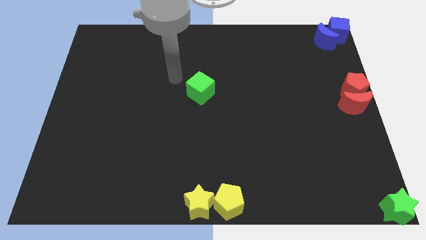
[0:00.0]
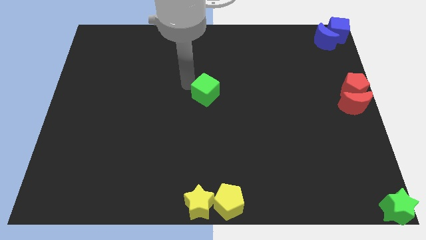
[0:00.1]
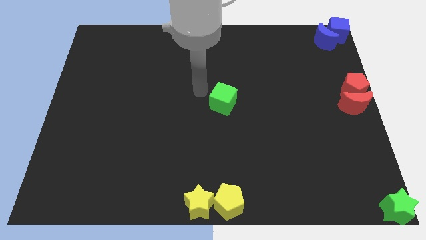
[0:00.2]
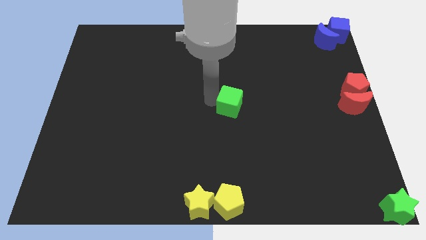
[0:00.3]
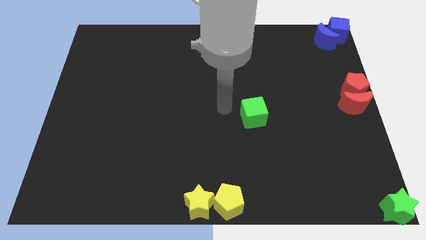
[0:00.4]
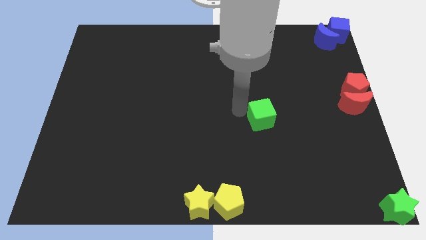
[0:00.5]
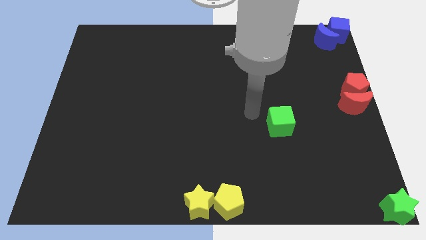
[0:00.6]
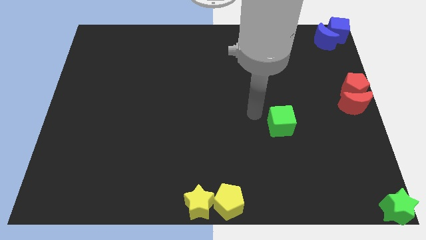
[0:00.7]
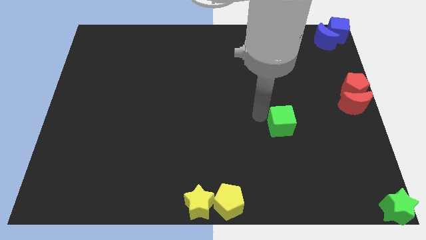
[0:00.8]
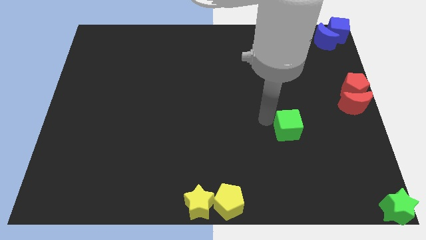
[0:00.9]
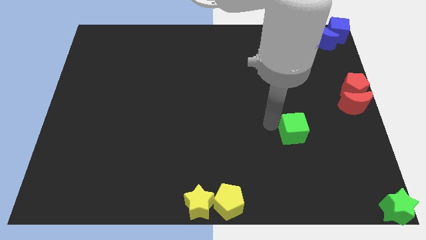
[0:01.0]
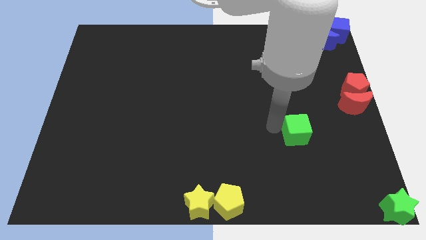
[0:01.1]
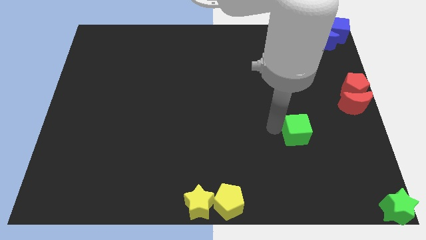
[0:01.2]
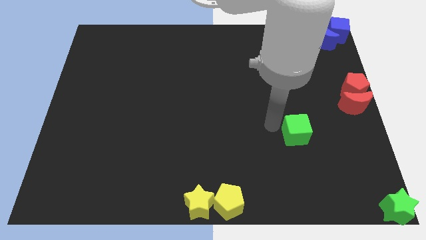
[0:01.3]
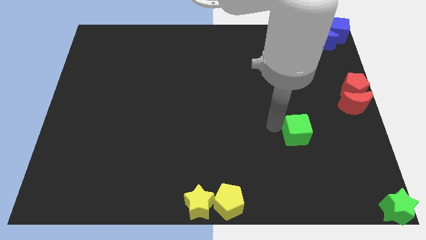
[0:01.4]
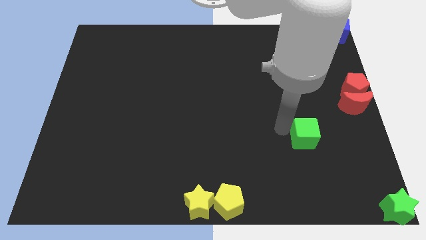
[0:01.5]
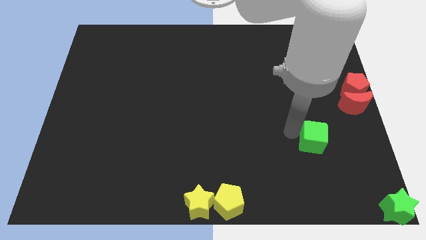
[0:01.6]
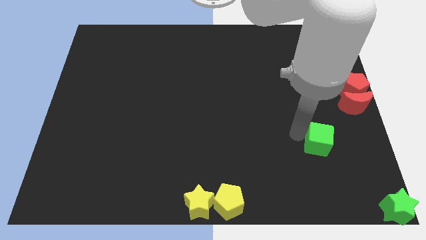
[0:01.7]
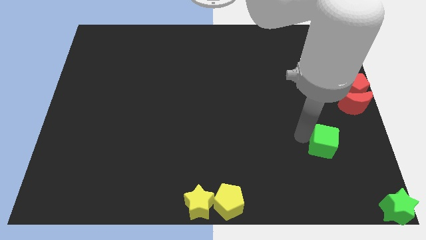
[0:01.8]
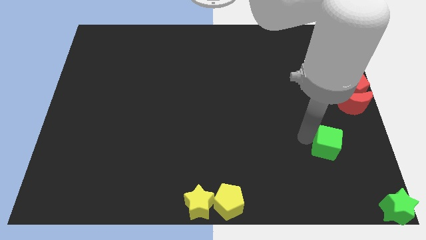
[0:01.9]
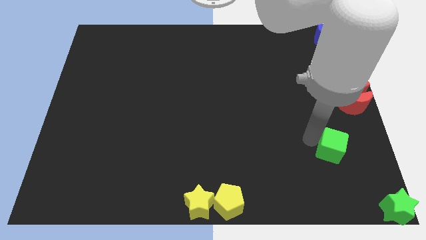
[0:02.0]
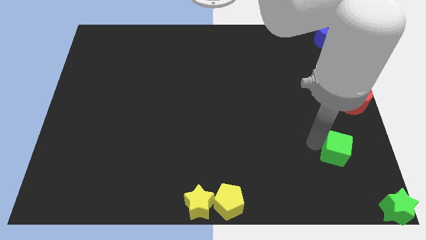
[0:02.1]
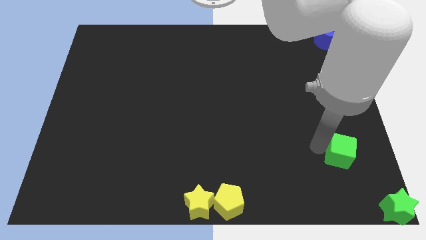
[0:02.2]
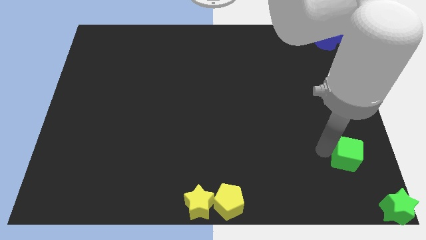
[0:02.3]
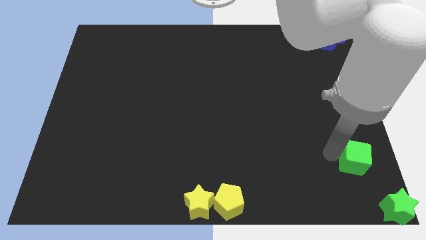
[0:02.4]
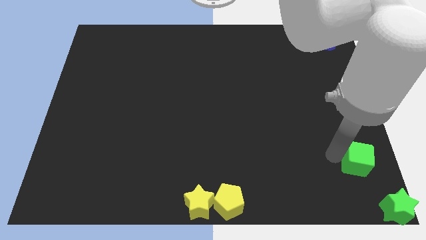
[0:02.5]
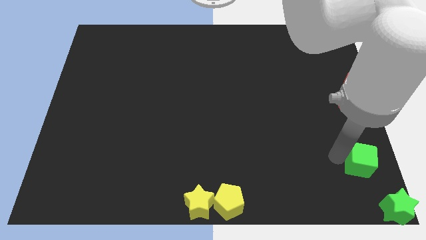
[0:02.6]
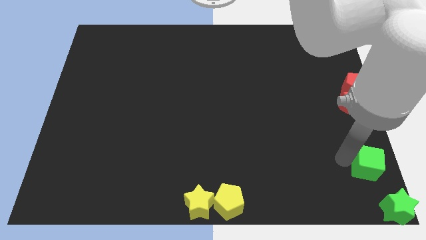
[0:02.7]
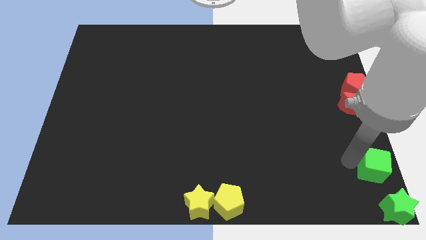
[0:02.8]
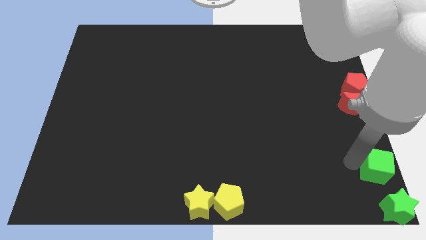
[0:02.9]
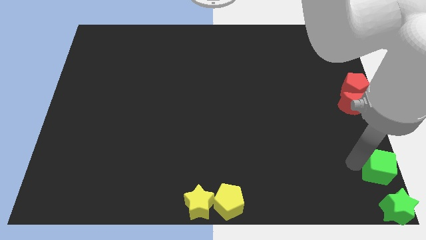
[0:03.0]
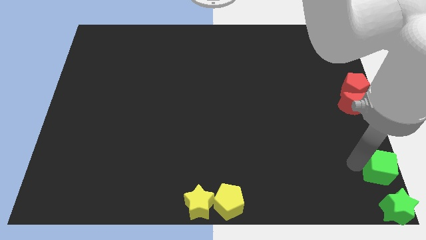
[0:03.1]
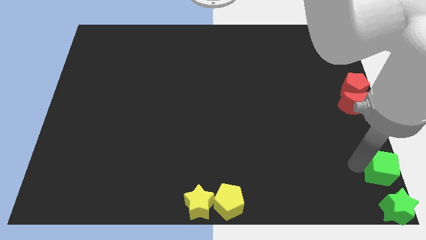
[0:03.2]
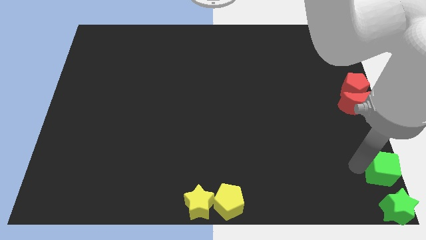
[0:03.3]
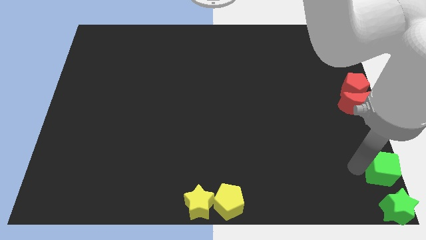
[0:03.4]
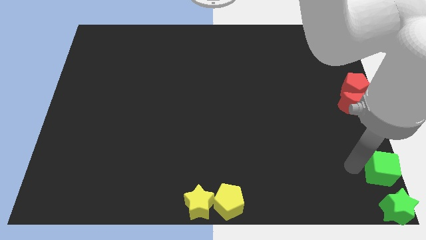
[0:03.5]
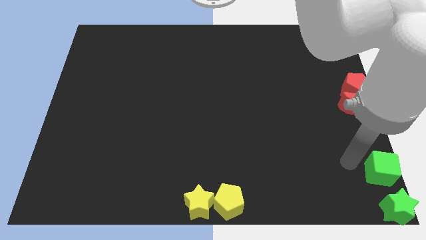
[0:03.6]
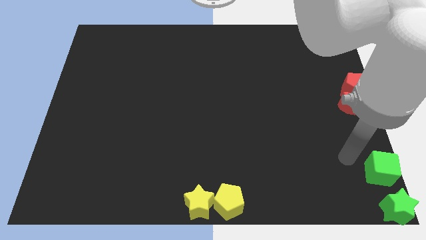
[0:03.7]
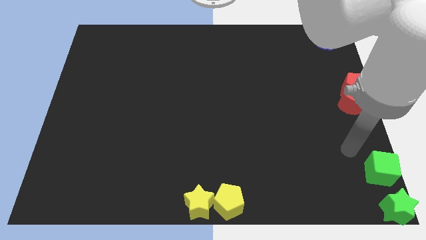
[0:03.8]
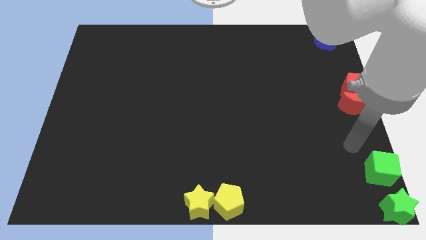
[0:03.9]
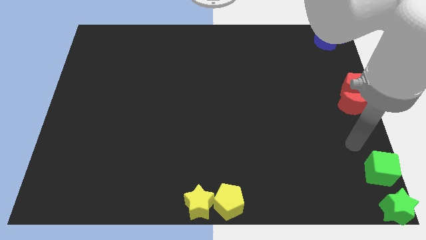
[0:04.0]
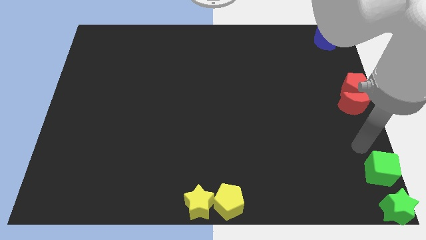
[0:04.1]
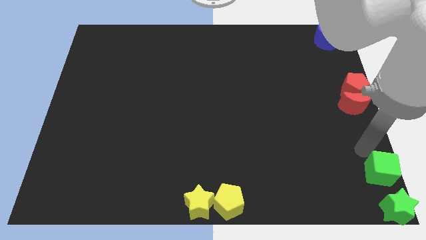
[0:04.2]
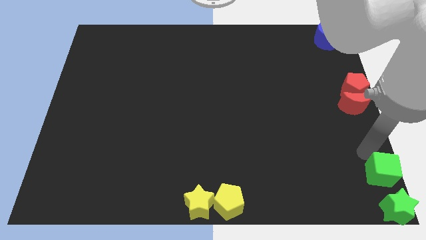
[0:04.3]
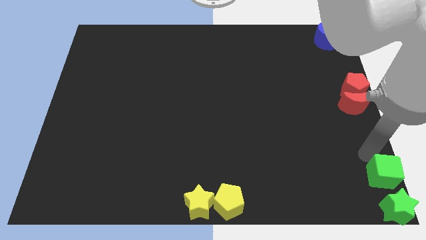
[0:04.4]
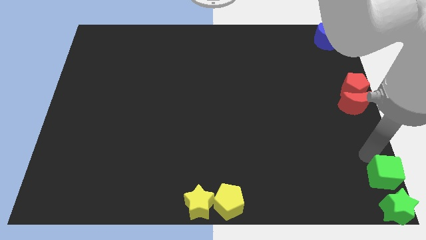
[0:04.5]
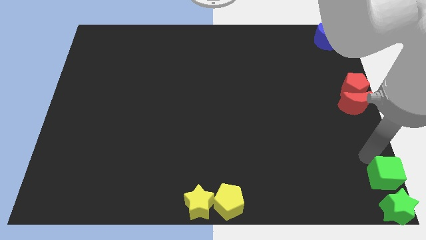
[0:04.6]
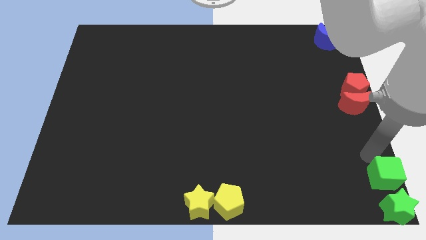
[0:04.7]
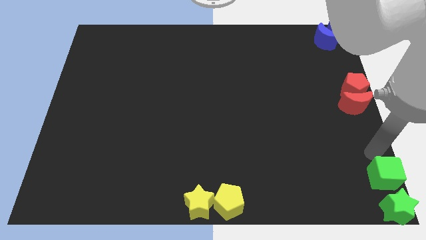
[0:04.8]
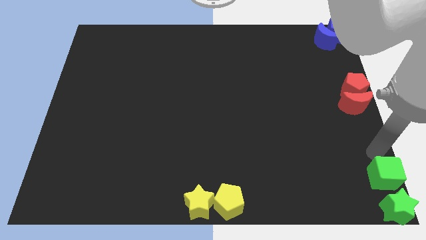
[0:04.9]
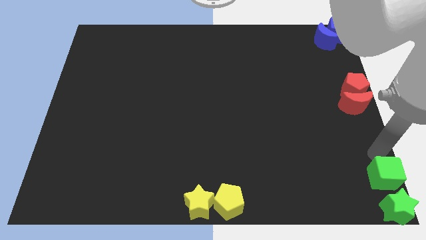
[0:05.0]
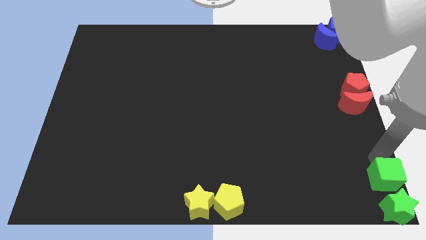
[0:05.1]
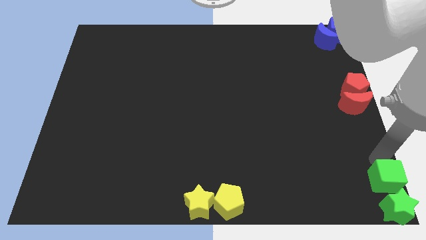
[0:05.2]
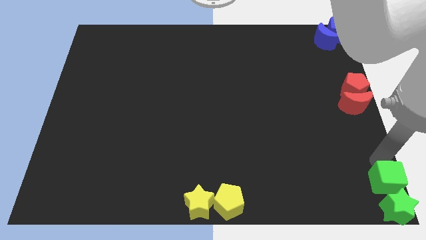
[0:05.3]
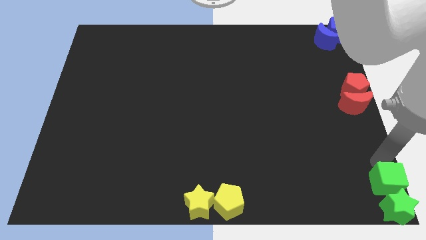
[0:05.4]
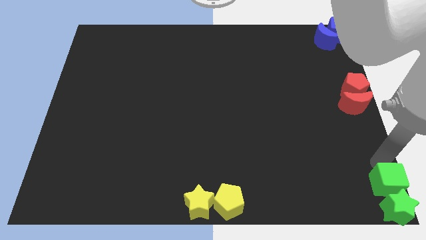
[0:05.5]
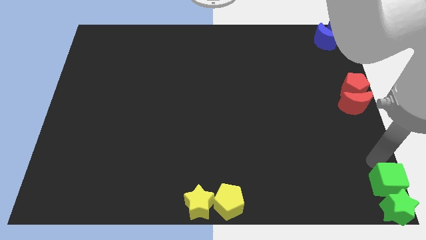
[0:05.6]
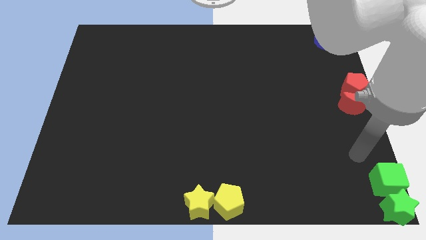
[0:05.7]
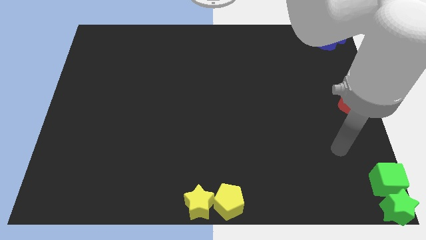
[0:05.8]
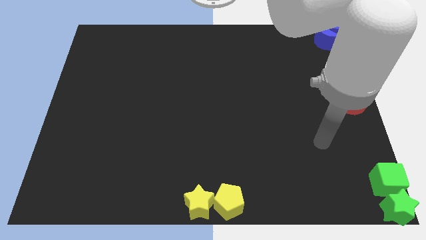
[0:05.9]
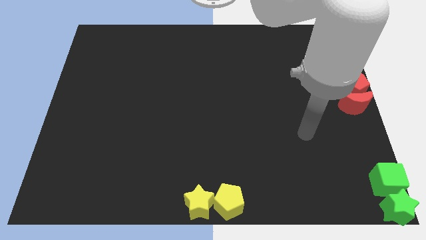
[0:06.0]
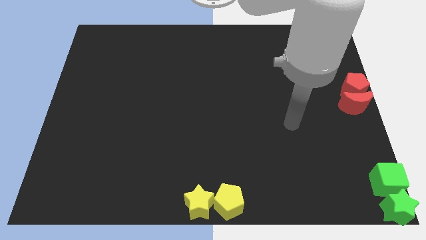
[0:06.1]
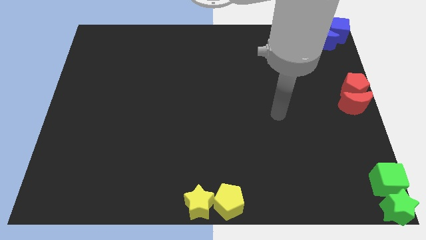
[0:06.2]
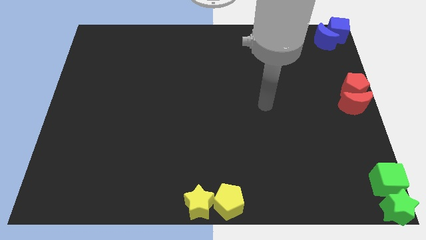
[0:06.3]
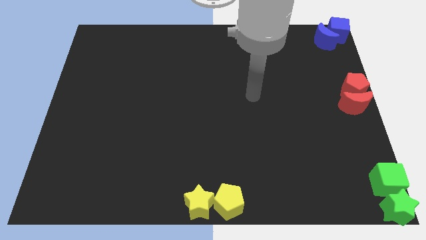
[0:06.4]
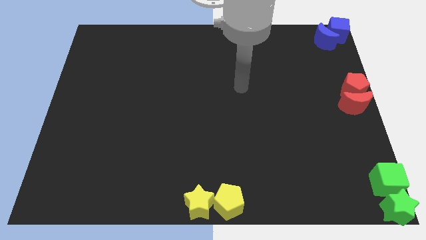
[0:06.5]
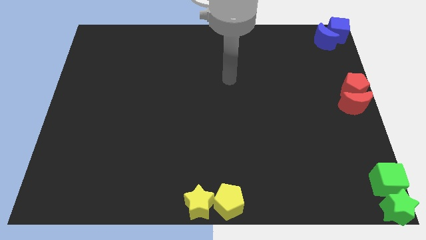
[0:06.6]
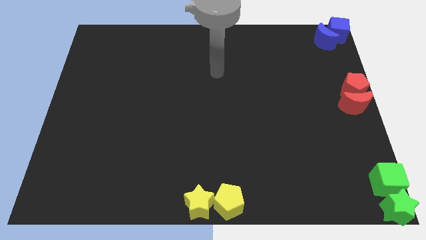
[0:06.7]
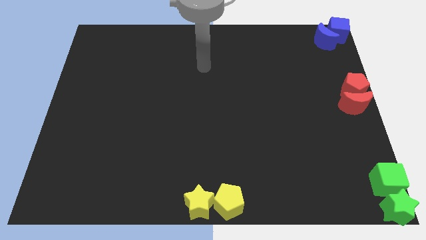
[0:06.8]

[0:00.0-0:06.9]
move the green cube above the green star

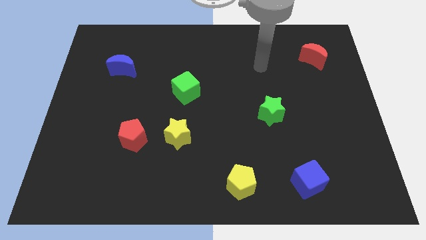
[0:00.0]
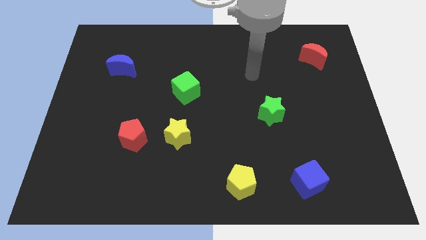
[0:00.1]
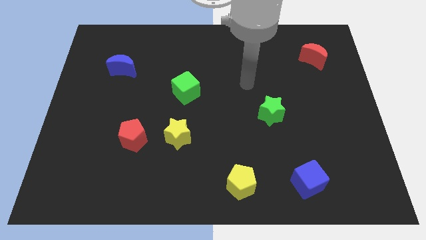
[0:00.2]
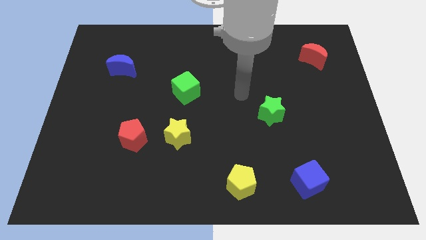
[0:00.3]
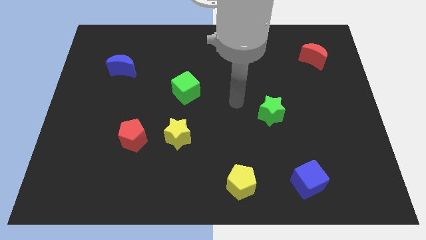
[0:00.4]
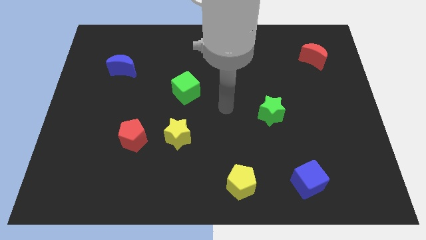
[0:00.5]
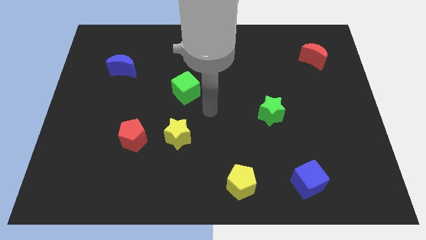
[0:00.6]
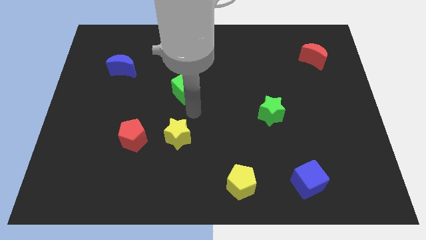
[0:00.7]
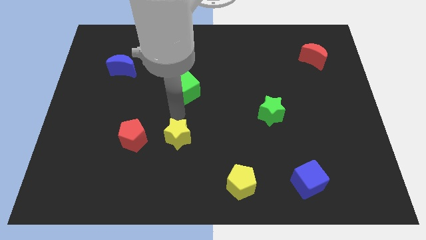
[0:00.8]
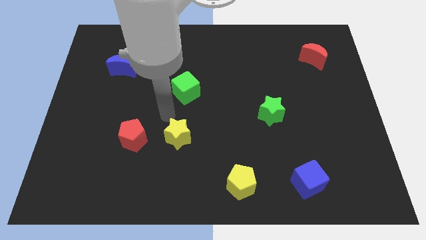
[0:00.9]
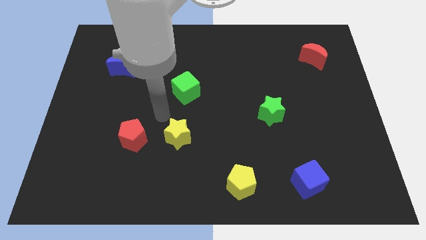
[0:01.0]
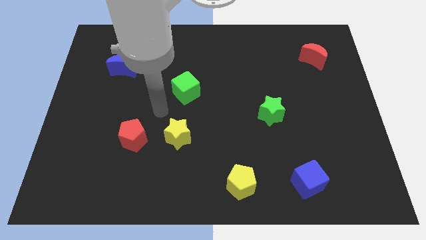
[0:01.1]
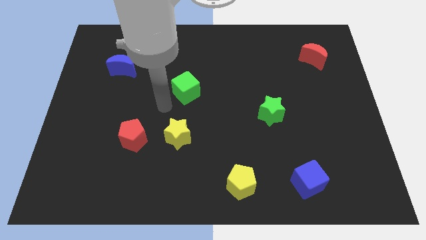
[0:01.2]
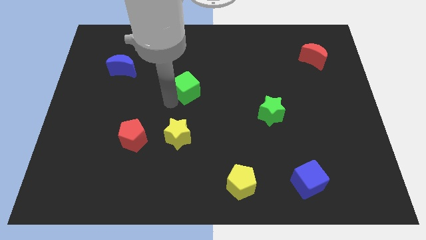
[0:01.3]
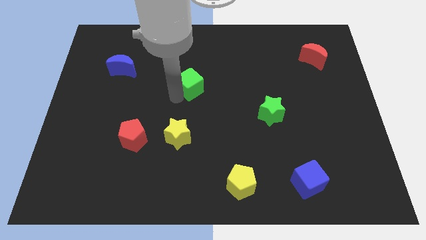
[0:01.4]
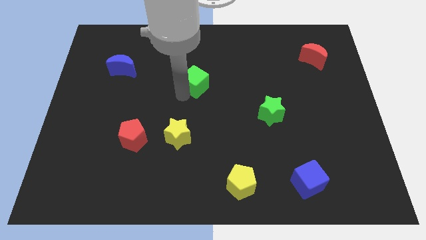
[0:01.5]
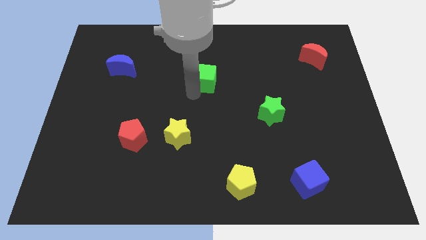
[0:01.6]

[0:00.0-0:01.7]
move the arm towards the green cube

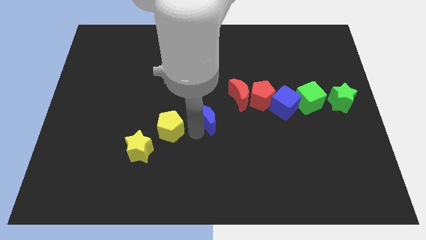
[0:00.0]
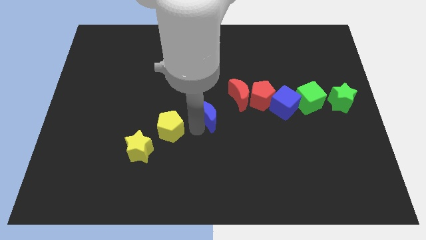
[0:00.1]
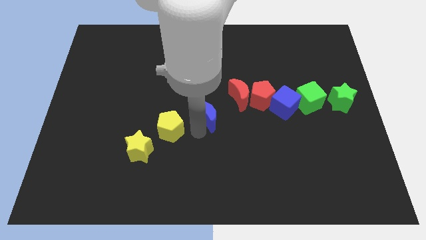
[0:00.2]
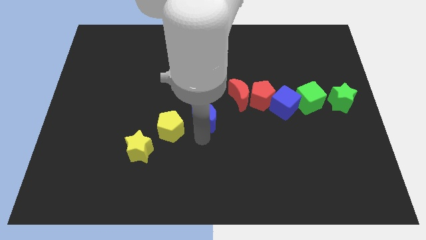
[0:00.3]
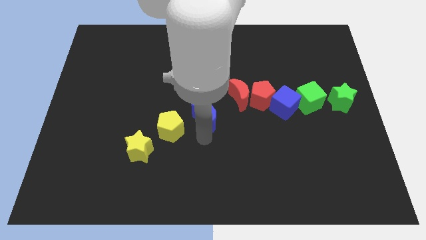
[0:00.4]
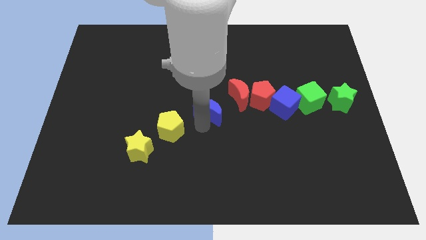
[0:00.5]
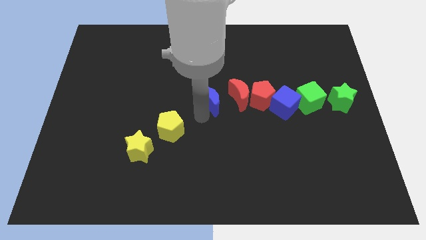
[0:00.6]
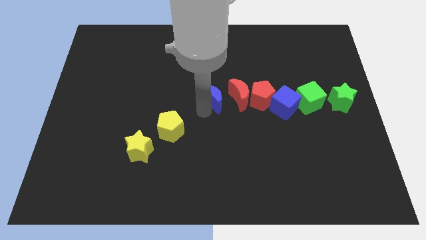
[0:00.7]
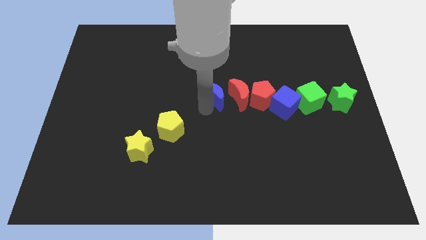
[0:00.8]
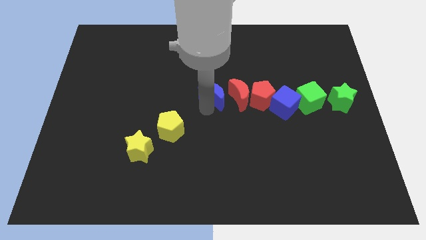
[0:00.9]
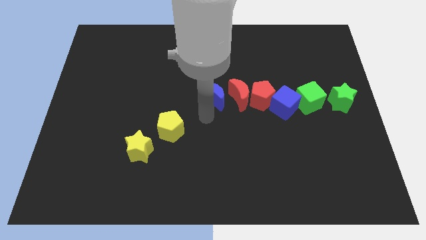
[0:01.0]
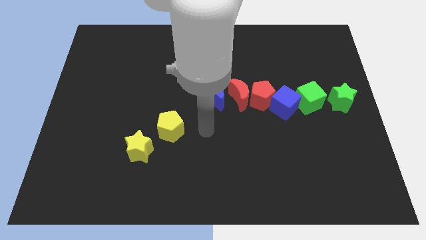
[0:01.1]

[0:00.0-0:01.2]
drag the blue moon on the left side of the red moon
